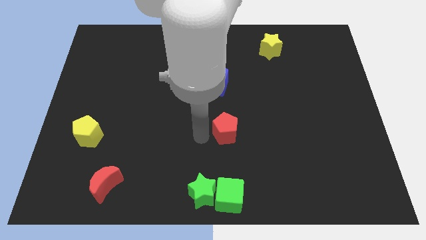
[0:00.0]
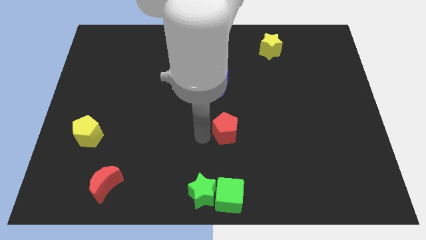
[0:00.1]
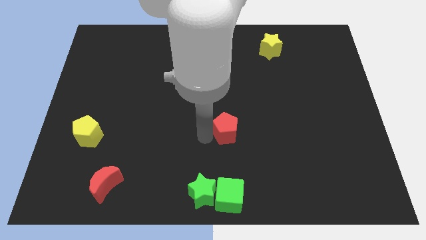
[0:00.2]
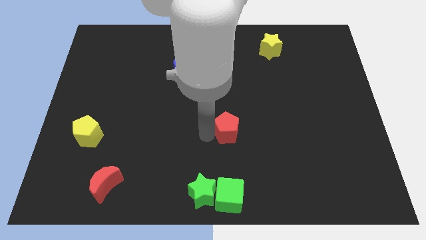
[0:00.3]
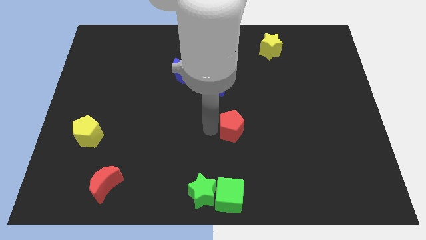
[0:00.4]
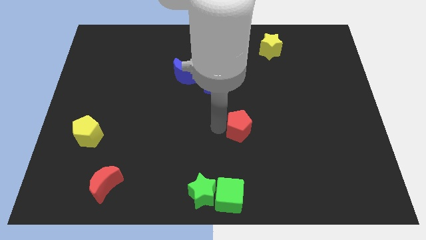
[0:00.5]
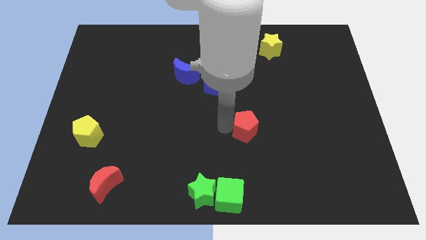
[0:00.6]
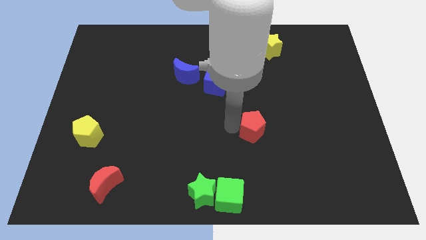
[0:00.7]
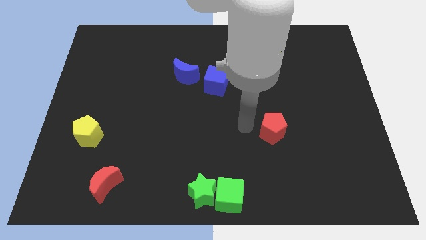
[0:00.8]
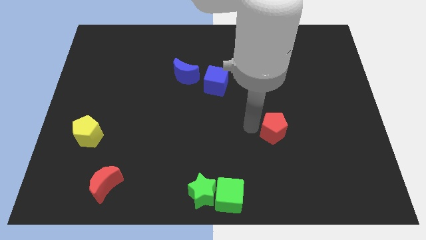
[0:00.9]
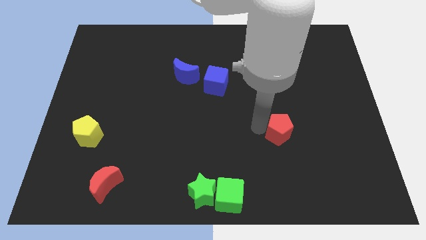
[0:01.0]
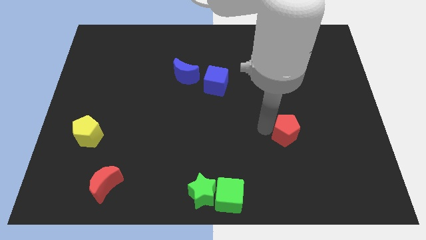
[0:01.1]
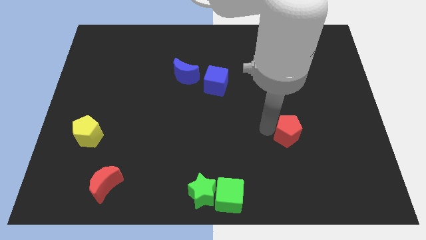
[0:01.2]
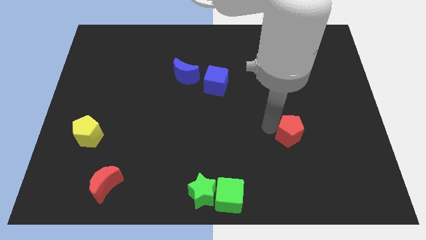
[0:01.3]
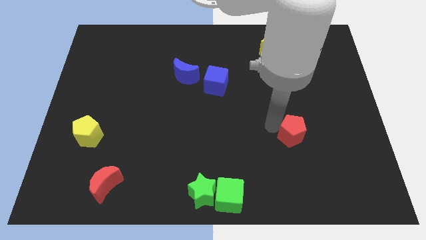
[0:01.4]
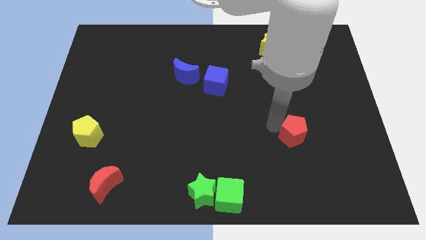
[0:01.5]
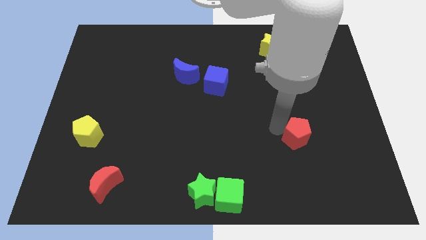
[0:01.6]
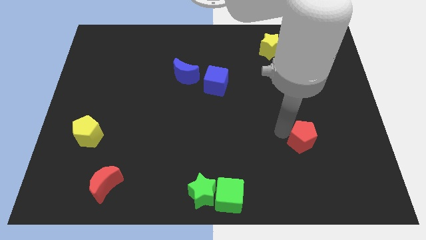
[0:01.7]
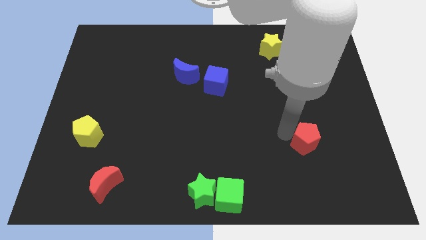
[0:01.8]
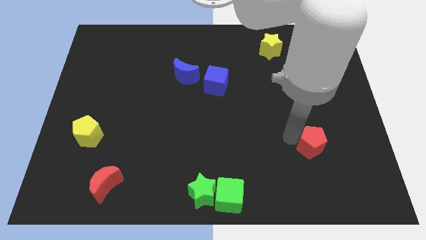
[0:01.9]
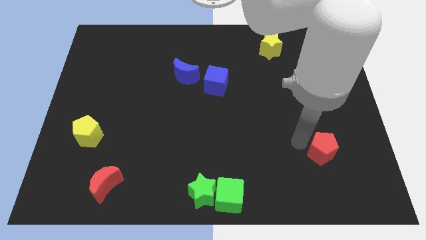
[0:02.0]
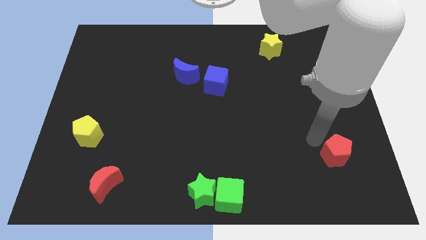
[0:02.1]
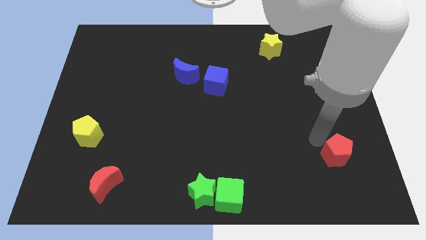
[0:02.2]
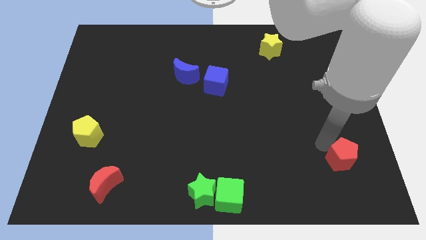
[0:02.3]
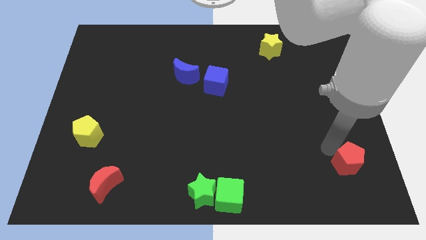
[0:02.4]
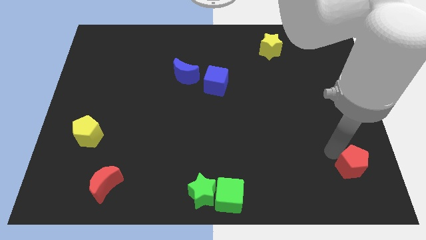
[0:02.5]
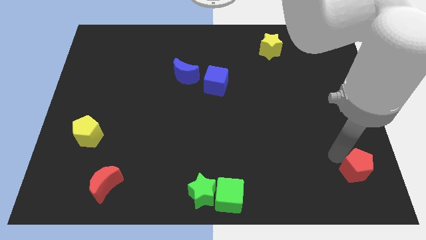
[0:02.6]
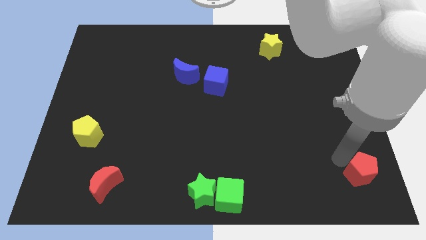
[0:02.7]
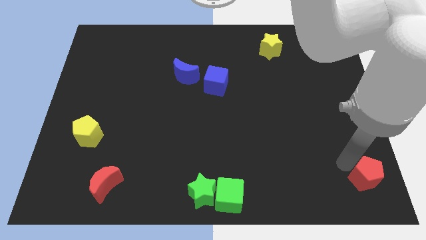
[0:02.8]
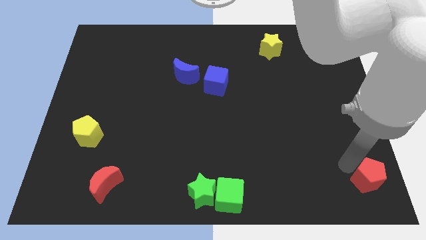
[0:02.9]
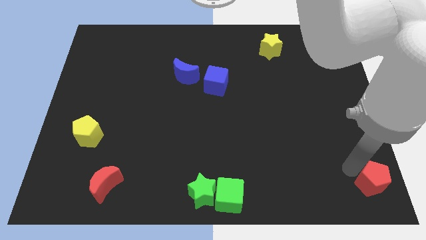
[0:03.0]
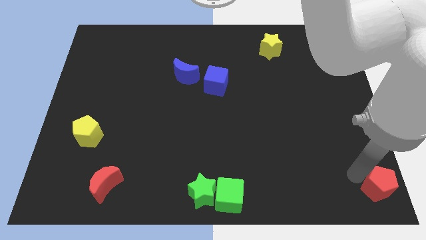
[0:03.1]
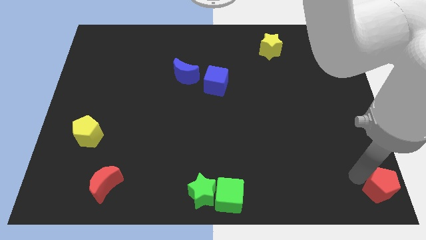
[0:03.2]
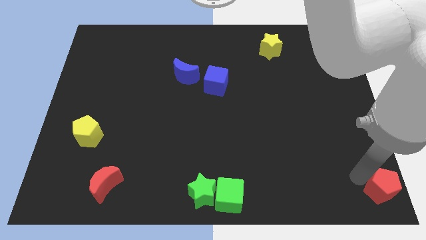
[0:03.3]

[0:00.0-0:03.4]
place red pentagon towards bottom right corner

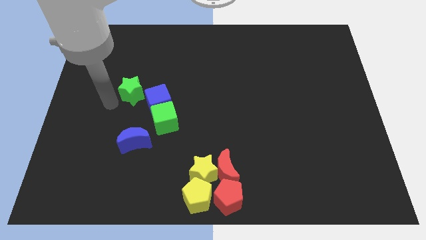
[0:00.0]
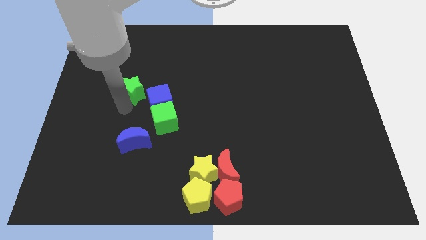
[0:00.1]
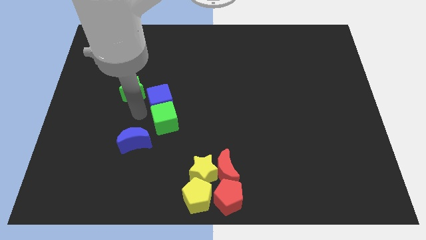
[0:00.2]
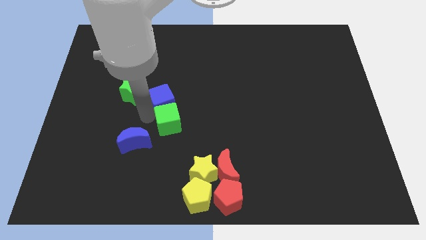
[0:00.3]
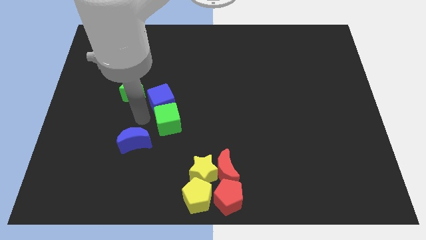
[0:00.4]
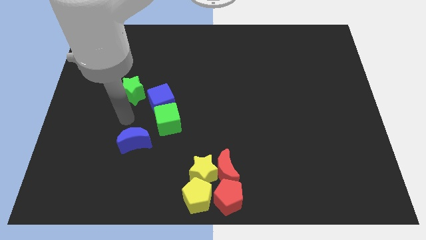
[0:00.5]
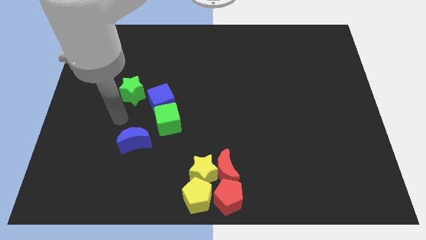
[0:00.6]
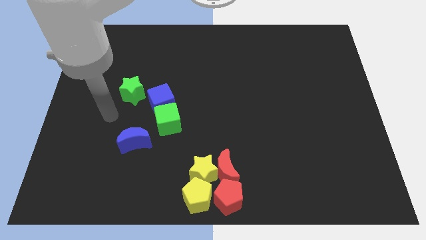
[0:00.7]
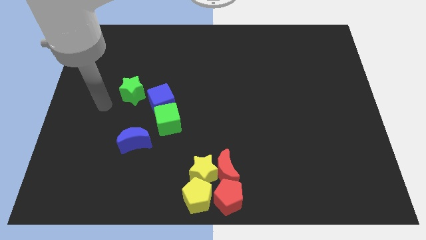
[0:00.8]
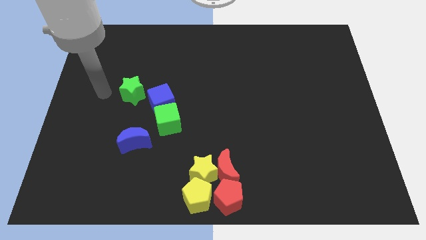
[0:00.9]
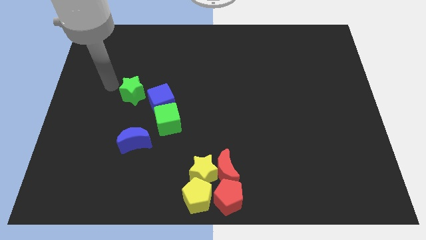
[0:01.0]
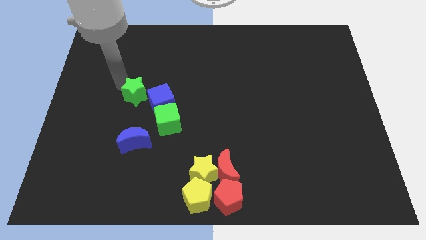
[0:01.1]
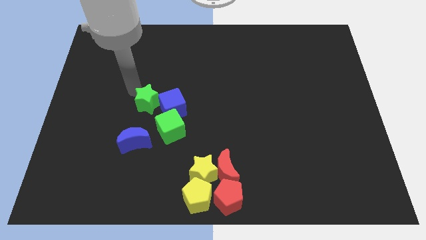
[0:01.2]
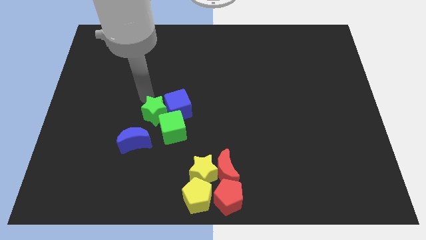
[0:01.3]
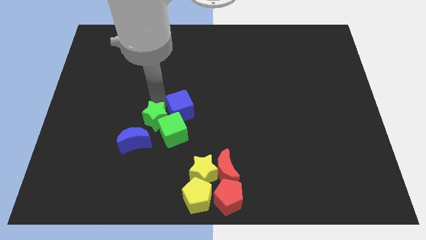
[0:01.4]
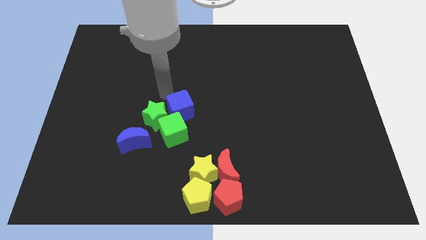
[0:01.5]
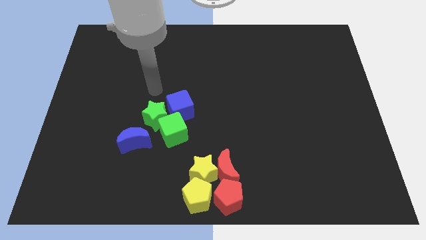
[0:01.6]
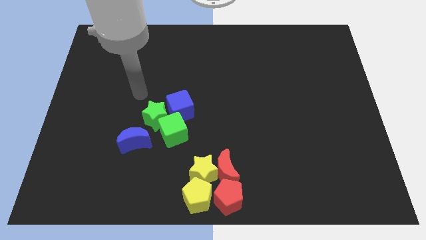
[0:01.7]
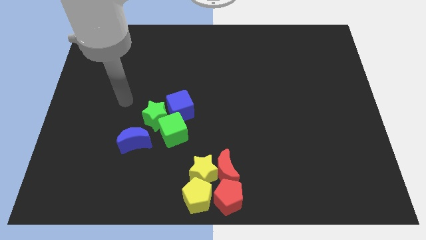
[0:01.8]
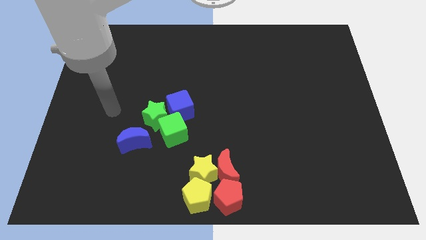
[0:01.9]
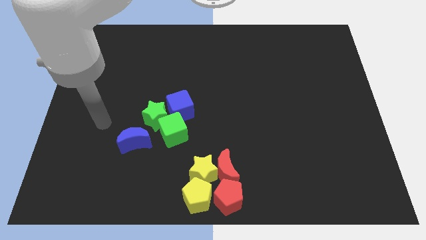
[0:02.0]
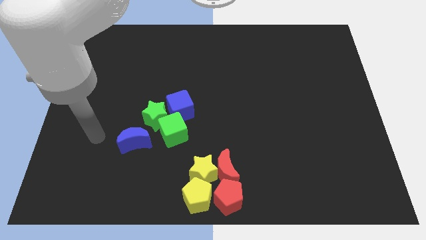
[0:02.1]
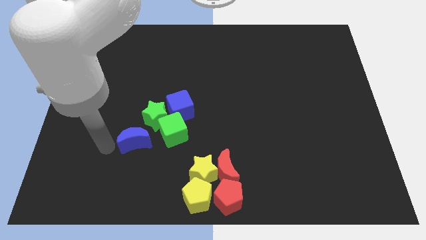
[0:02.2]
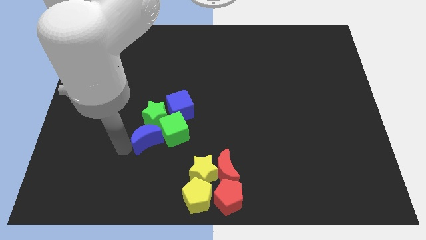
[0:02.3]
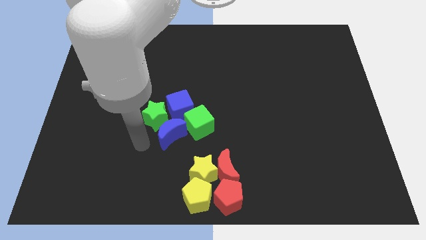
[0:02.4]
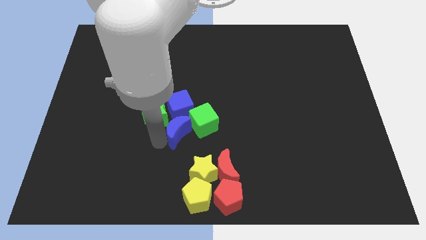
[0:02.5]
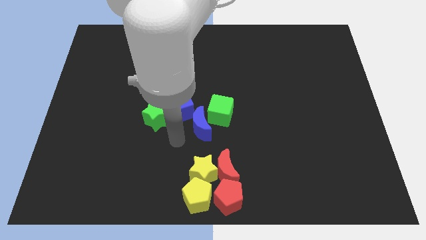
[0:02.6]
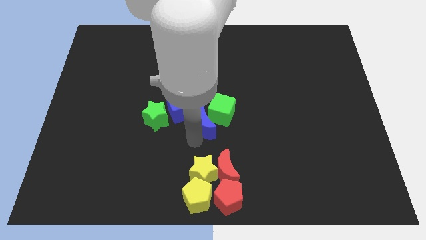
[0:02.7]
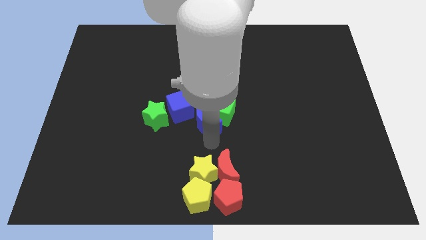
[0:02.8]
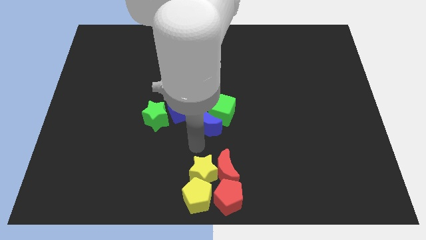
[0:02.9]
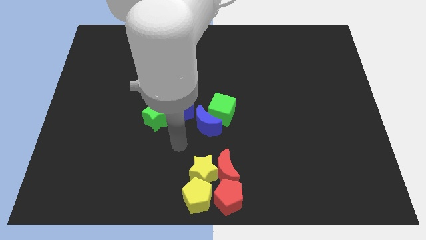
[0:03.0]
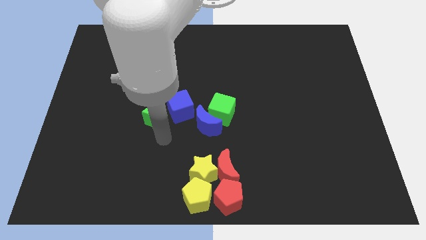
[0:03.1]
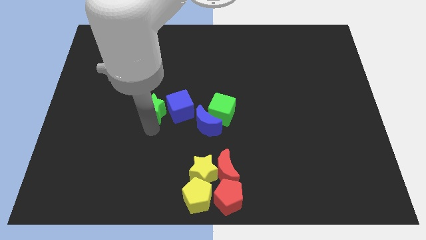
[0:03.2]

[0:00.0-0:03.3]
push blue moon and green cube towards the center

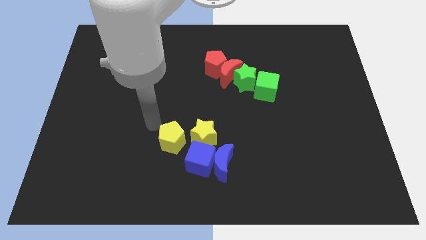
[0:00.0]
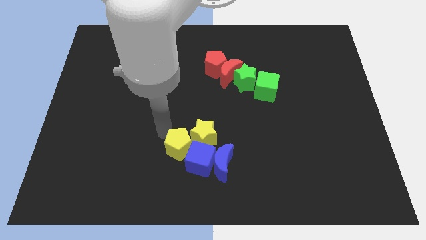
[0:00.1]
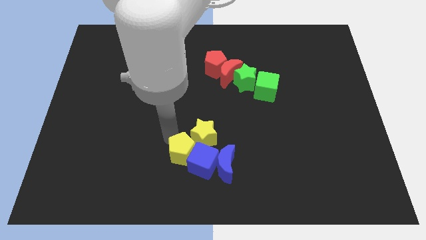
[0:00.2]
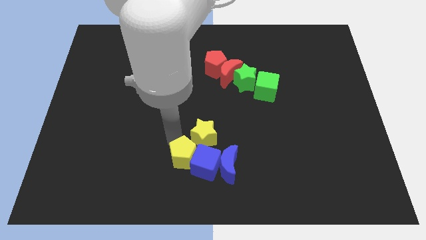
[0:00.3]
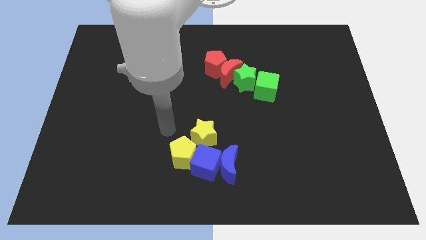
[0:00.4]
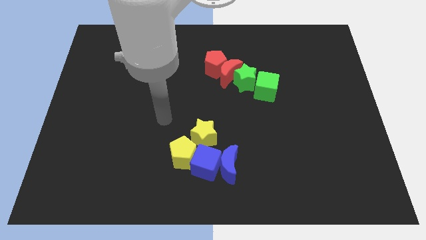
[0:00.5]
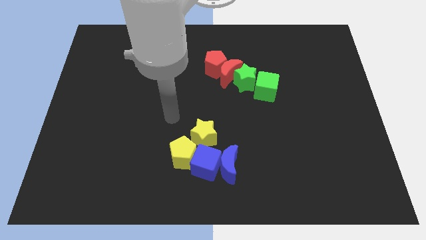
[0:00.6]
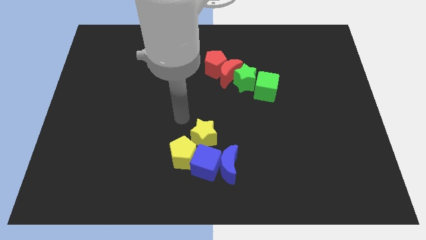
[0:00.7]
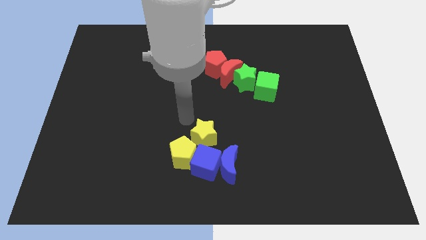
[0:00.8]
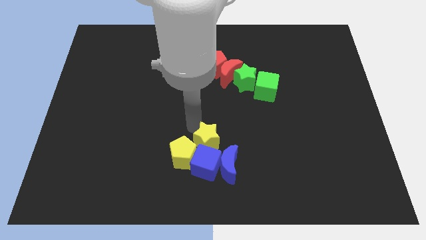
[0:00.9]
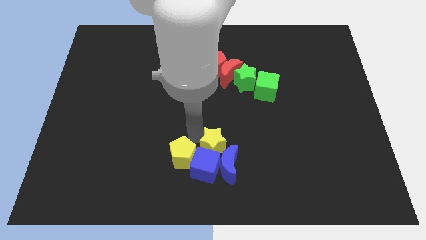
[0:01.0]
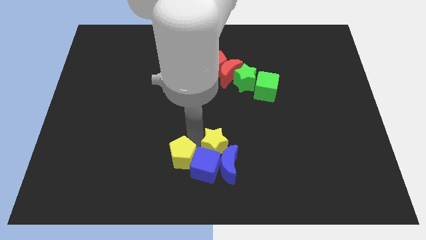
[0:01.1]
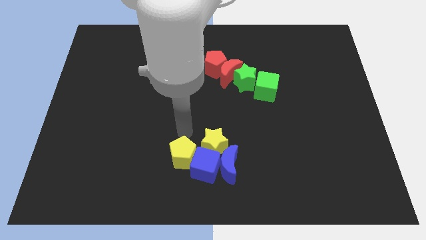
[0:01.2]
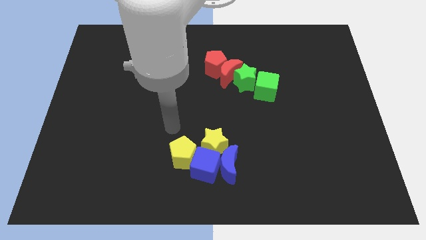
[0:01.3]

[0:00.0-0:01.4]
push the yellow star into the blue cube

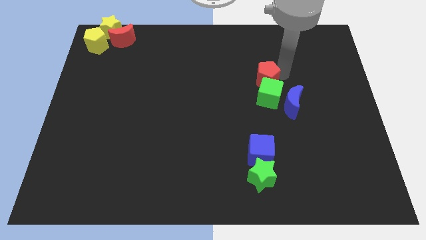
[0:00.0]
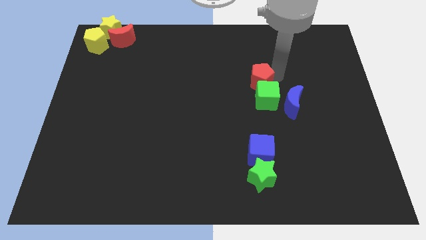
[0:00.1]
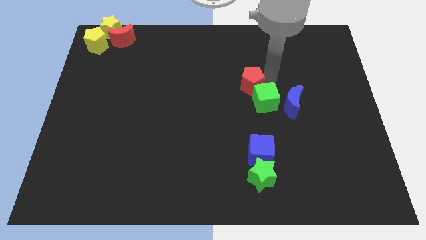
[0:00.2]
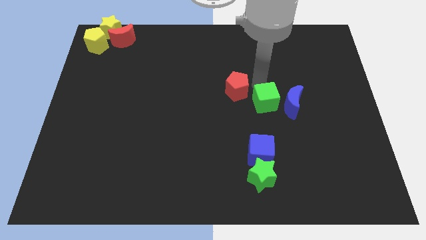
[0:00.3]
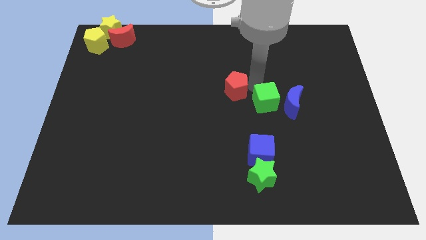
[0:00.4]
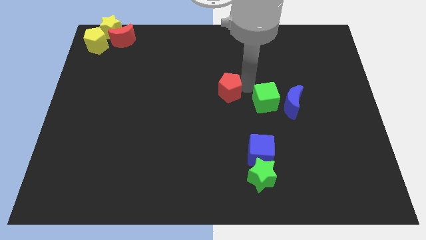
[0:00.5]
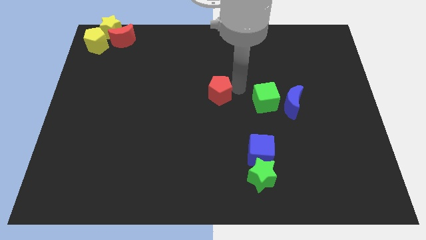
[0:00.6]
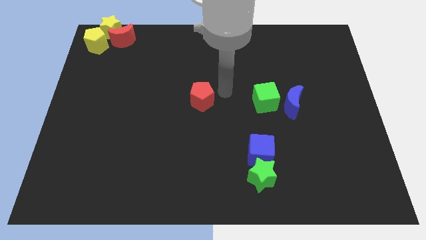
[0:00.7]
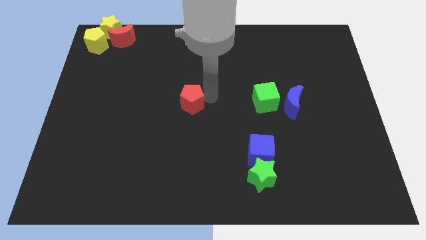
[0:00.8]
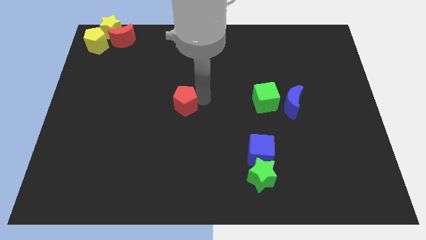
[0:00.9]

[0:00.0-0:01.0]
place the red pentagon left to the green cube
